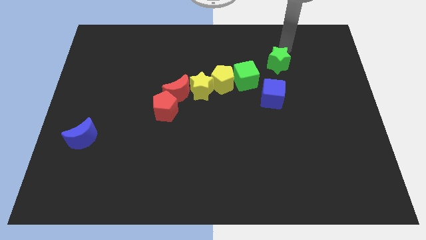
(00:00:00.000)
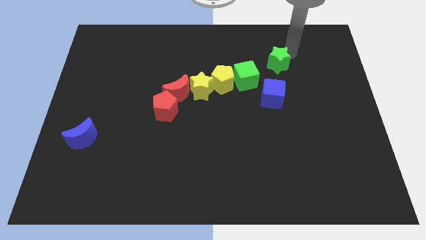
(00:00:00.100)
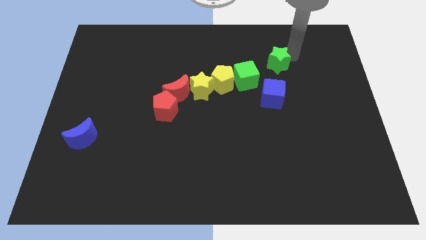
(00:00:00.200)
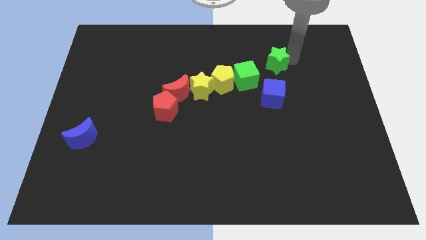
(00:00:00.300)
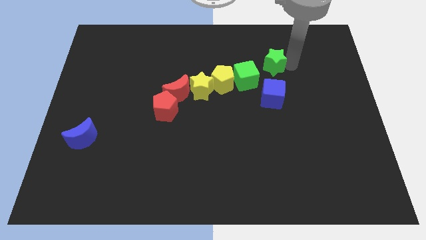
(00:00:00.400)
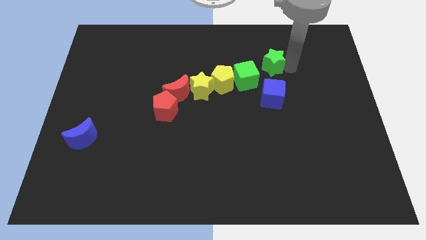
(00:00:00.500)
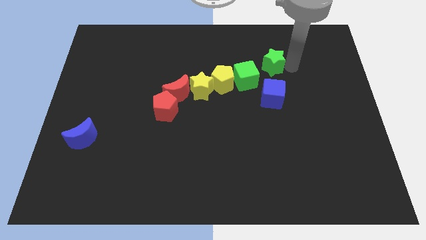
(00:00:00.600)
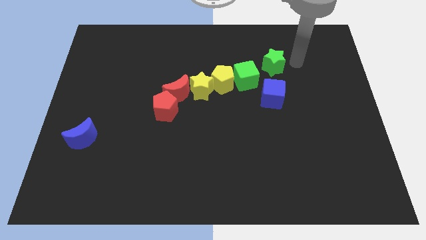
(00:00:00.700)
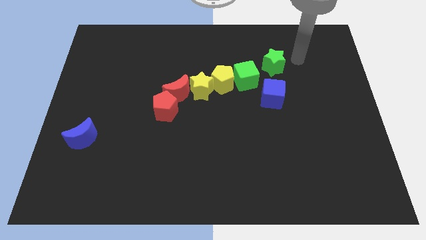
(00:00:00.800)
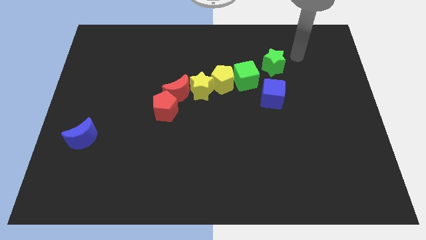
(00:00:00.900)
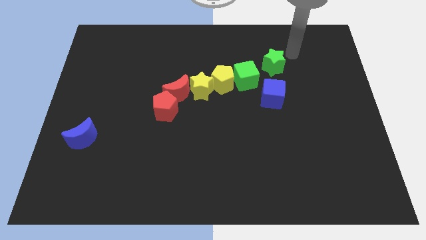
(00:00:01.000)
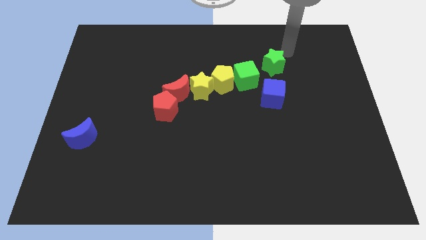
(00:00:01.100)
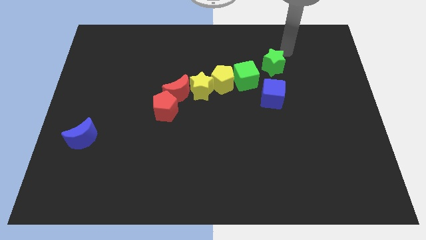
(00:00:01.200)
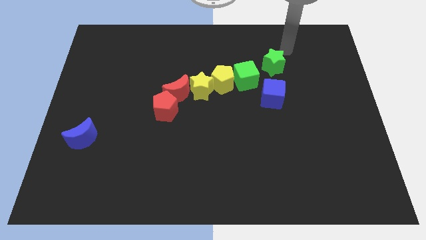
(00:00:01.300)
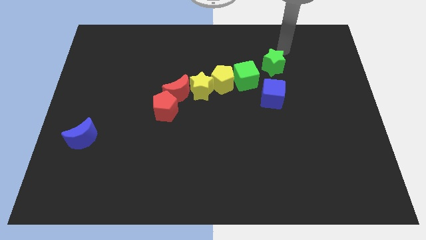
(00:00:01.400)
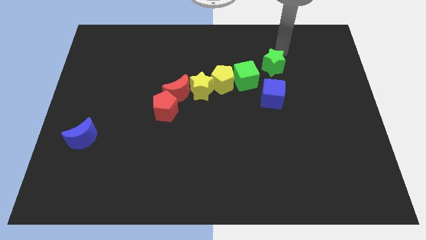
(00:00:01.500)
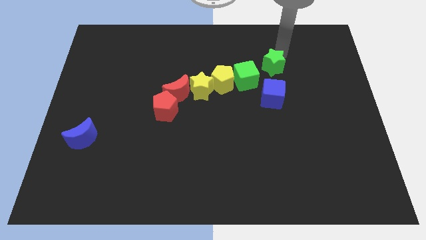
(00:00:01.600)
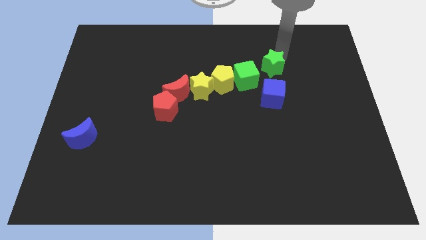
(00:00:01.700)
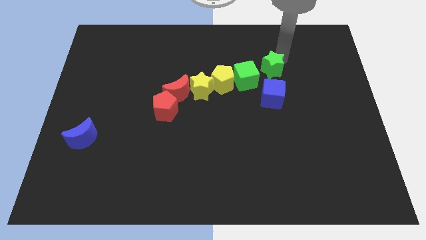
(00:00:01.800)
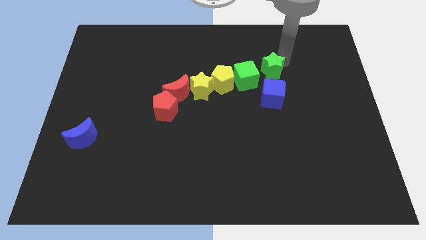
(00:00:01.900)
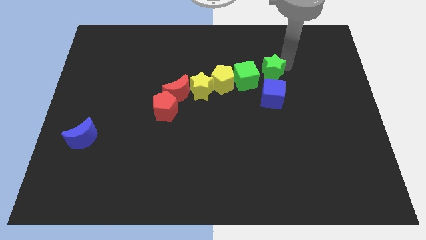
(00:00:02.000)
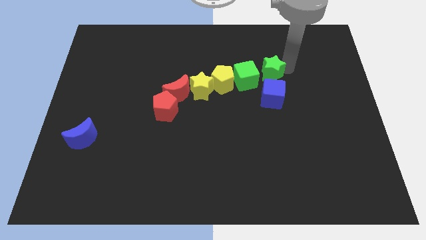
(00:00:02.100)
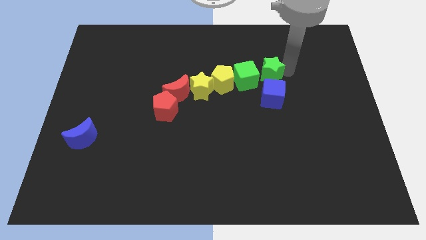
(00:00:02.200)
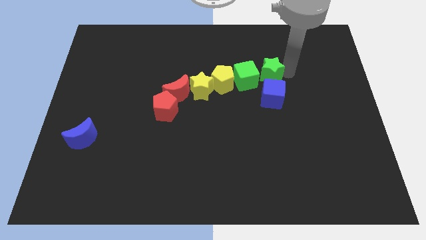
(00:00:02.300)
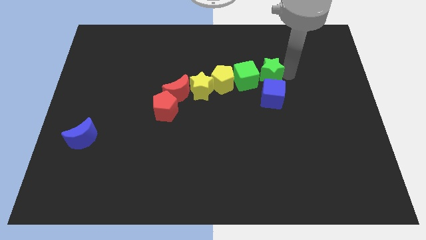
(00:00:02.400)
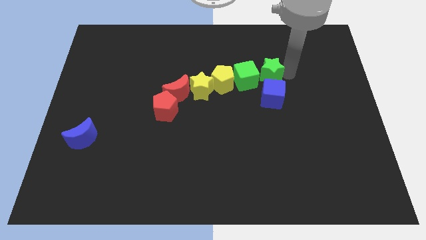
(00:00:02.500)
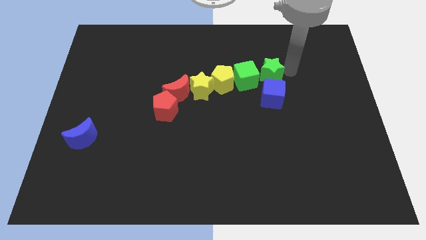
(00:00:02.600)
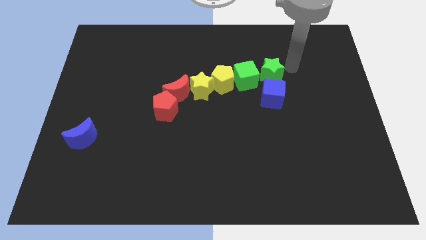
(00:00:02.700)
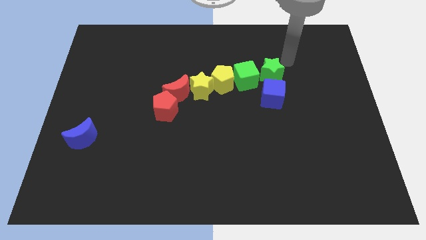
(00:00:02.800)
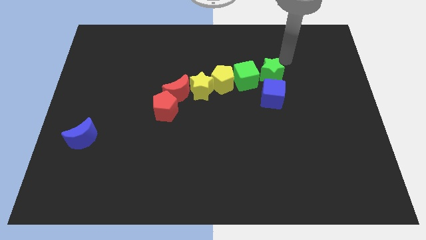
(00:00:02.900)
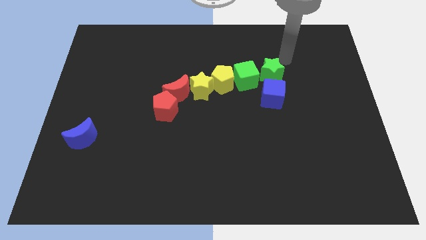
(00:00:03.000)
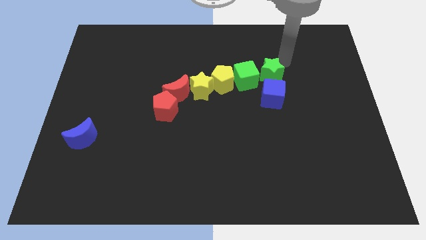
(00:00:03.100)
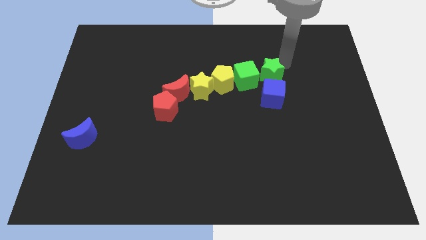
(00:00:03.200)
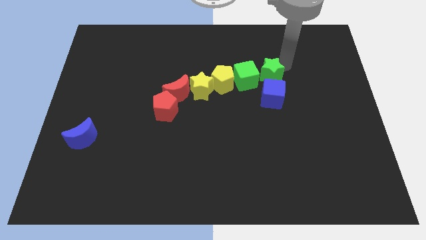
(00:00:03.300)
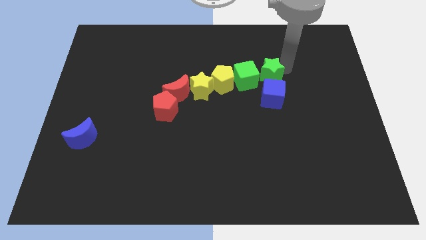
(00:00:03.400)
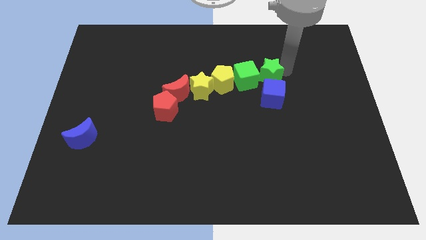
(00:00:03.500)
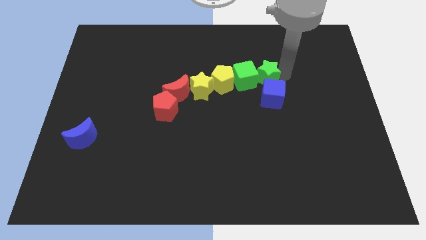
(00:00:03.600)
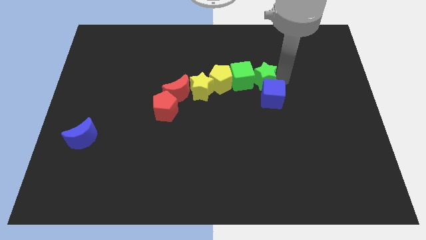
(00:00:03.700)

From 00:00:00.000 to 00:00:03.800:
push the green star into green cube

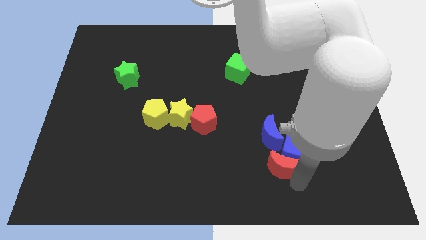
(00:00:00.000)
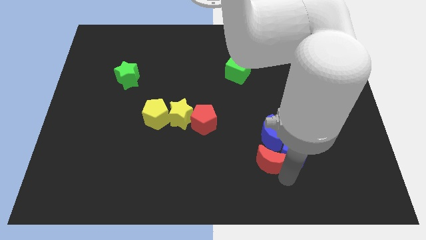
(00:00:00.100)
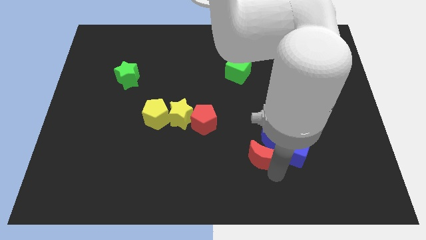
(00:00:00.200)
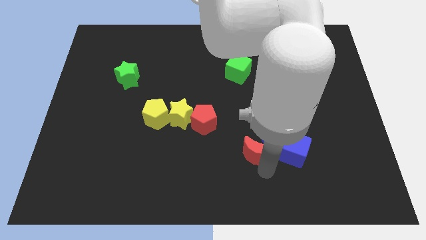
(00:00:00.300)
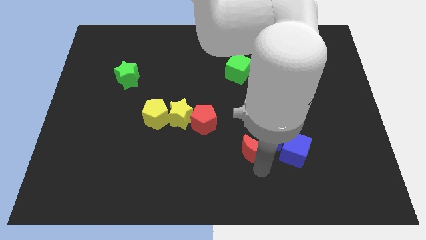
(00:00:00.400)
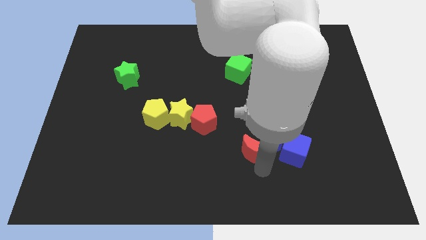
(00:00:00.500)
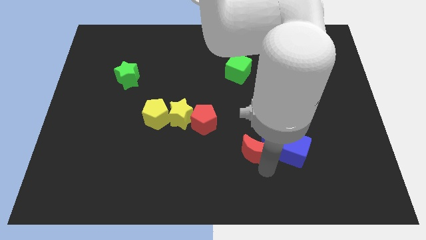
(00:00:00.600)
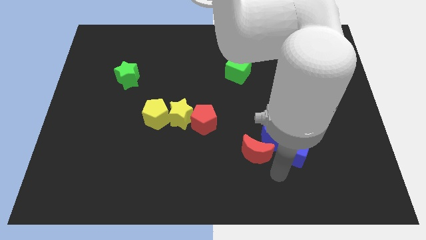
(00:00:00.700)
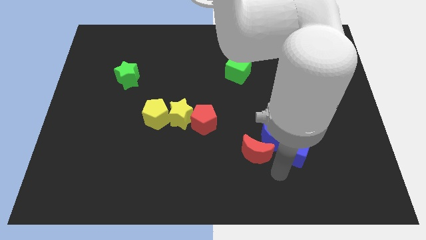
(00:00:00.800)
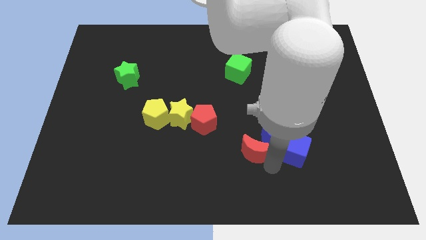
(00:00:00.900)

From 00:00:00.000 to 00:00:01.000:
separate red moon from blue cube

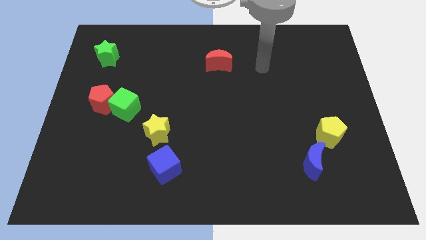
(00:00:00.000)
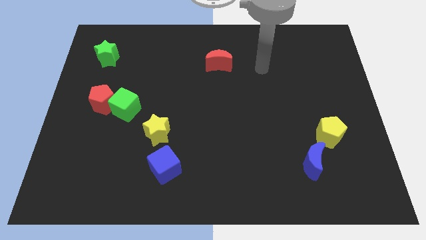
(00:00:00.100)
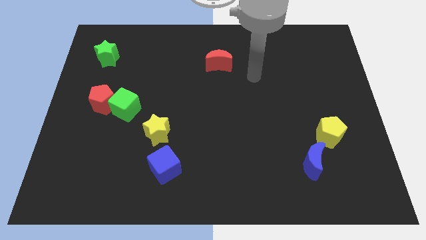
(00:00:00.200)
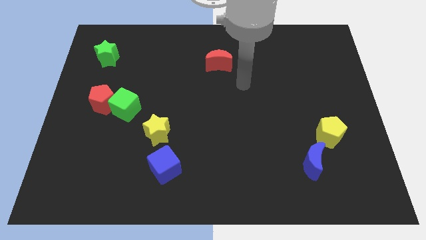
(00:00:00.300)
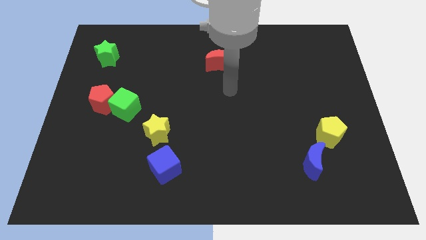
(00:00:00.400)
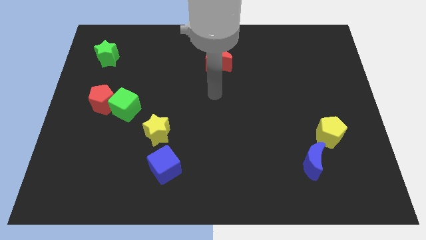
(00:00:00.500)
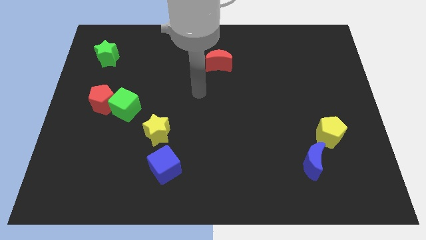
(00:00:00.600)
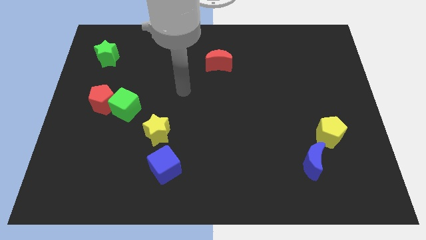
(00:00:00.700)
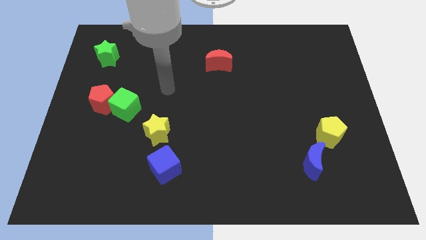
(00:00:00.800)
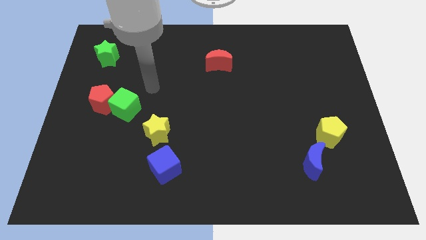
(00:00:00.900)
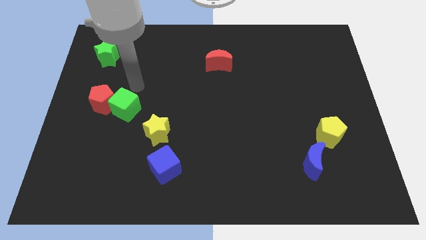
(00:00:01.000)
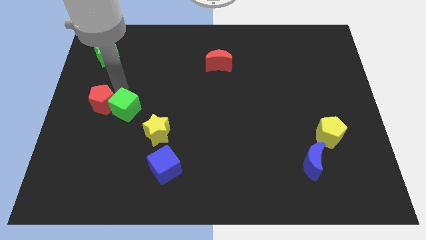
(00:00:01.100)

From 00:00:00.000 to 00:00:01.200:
move arm near red pentagon

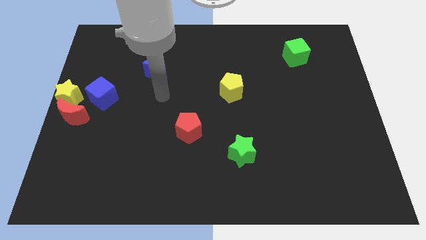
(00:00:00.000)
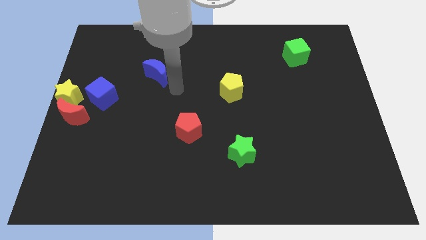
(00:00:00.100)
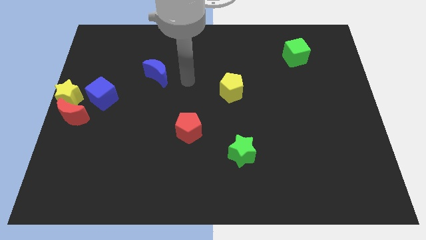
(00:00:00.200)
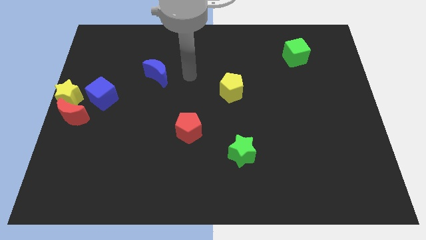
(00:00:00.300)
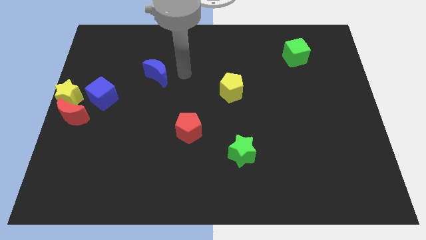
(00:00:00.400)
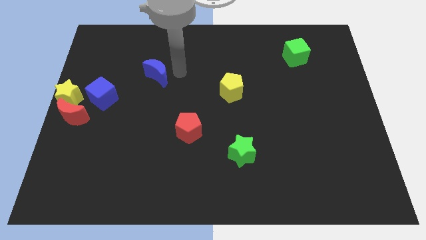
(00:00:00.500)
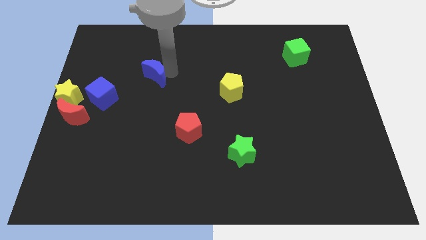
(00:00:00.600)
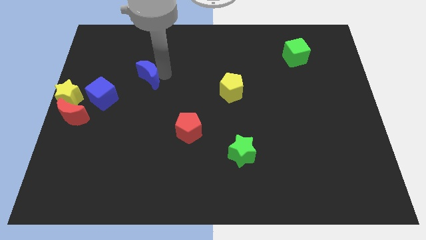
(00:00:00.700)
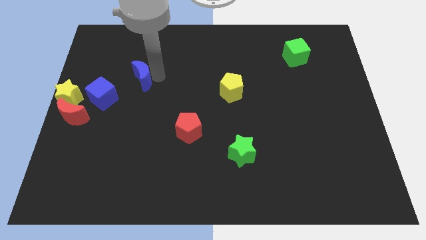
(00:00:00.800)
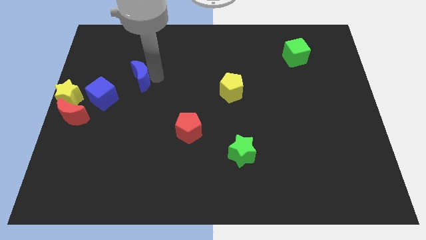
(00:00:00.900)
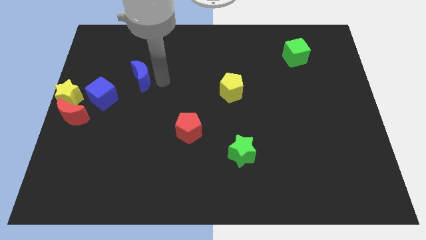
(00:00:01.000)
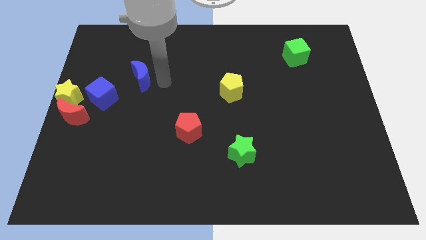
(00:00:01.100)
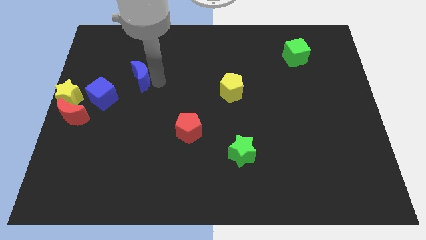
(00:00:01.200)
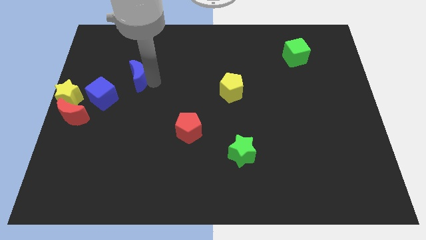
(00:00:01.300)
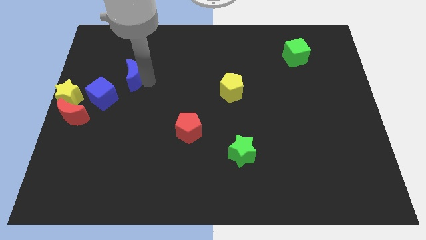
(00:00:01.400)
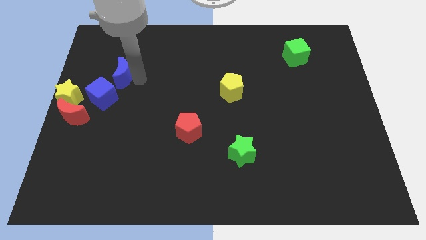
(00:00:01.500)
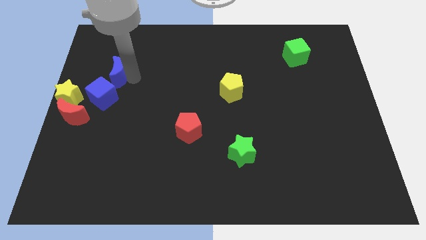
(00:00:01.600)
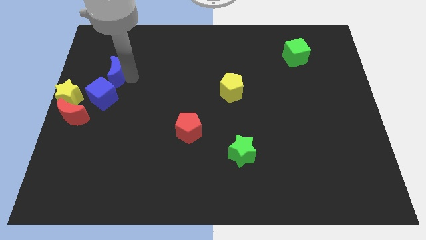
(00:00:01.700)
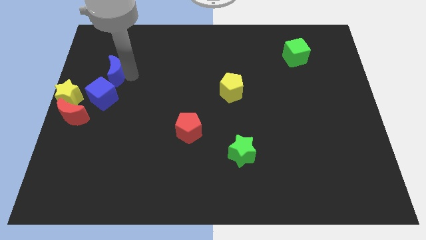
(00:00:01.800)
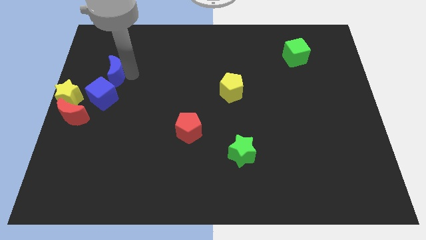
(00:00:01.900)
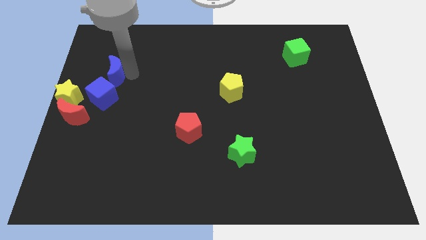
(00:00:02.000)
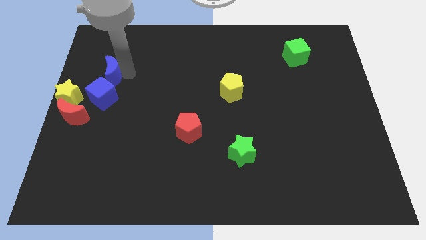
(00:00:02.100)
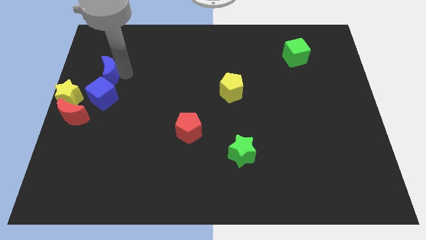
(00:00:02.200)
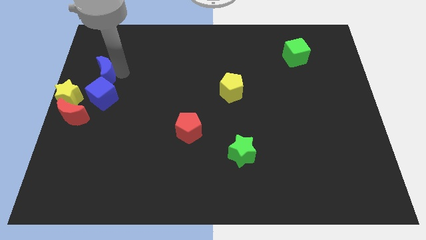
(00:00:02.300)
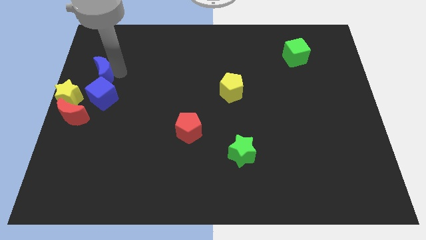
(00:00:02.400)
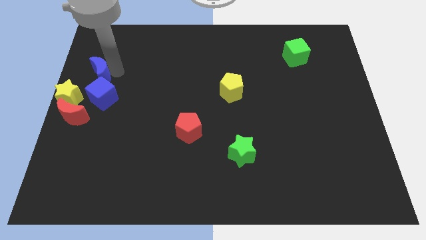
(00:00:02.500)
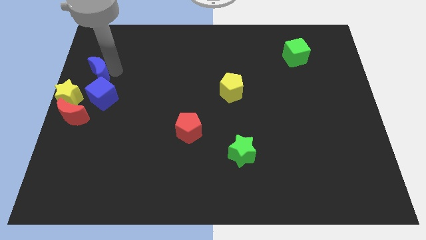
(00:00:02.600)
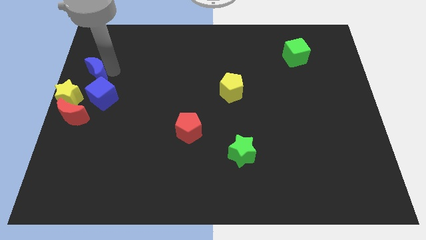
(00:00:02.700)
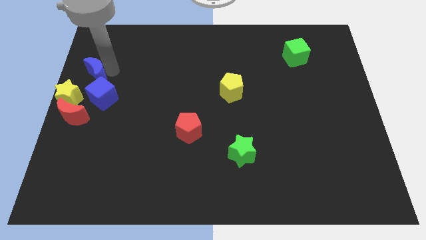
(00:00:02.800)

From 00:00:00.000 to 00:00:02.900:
place the blue moon at the top of the blue cube
